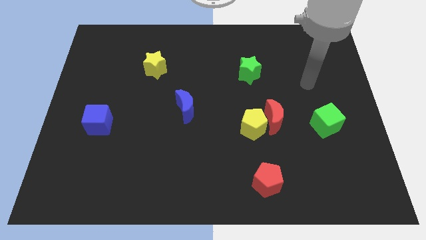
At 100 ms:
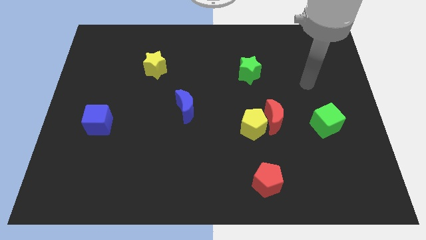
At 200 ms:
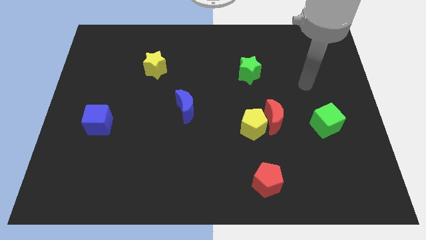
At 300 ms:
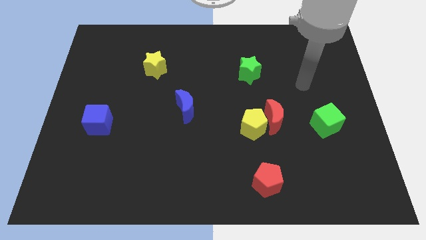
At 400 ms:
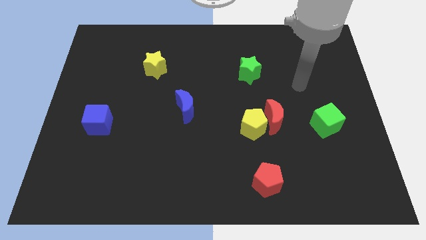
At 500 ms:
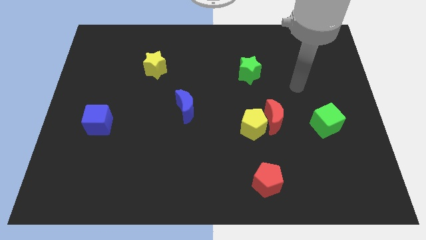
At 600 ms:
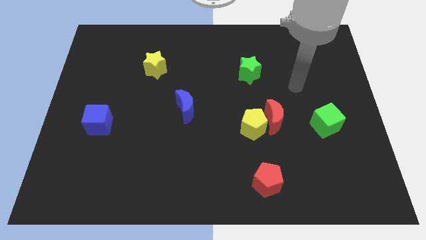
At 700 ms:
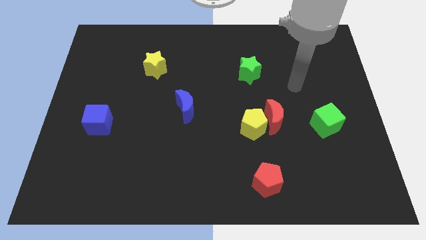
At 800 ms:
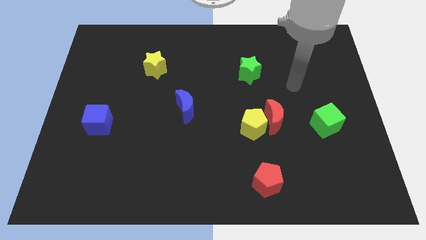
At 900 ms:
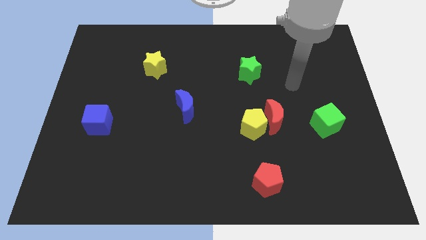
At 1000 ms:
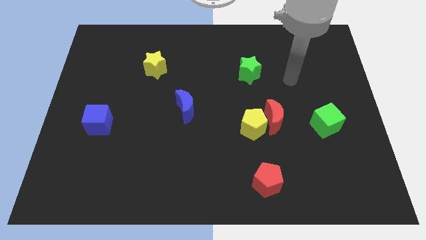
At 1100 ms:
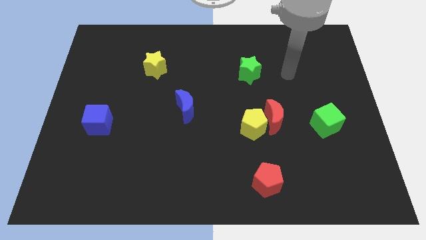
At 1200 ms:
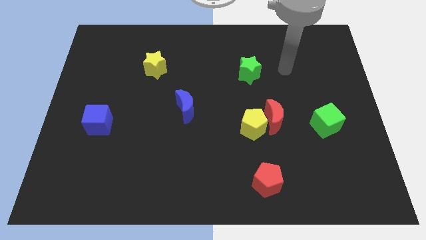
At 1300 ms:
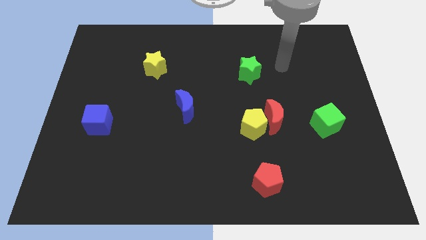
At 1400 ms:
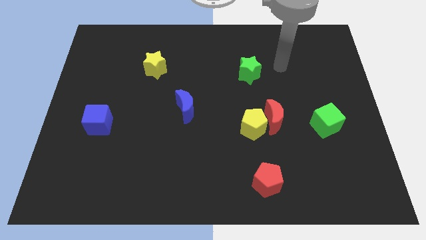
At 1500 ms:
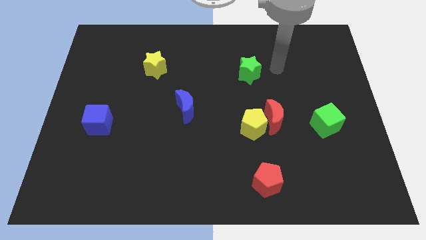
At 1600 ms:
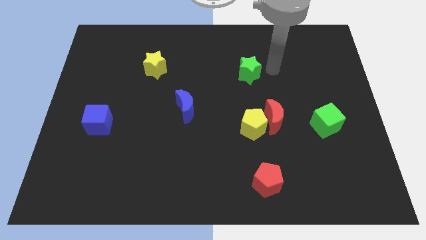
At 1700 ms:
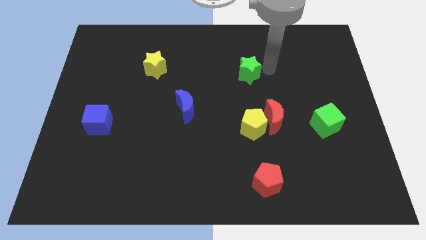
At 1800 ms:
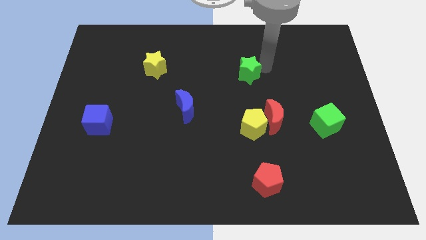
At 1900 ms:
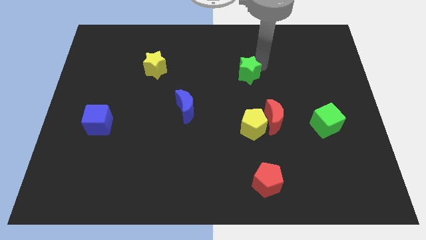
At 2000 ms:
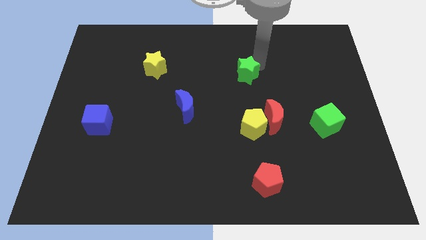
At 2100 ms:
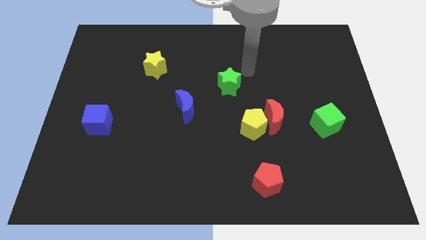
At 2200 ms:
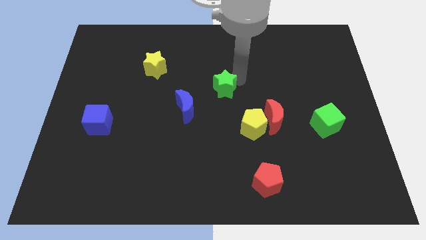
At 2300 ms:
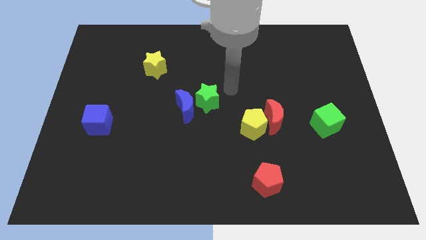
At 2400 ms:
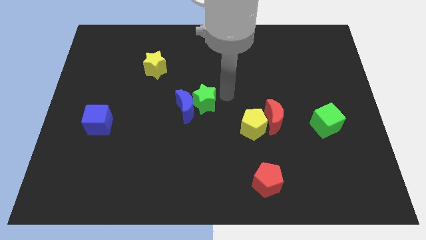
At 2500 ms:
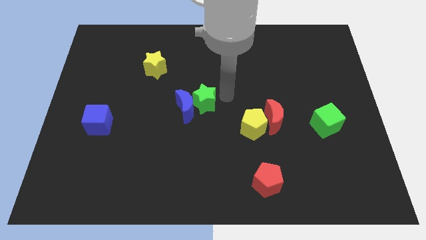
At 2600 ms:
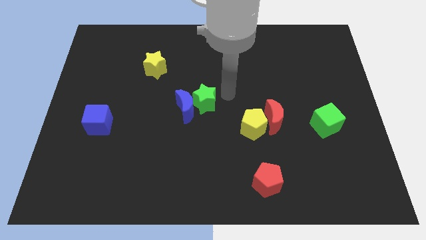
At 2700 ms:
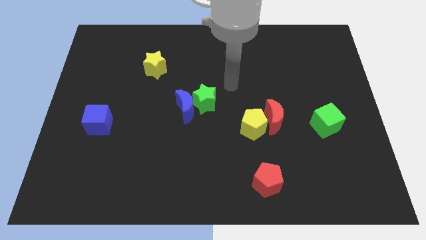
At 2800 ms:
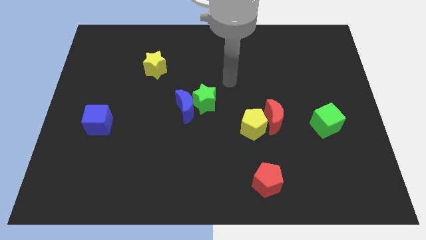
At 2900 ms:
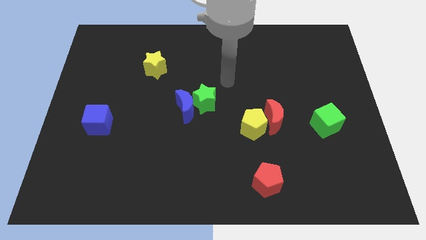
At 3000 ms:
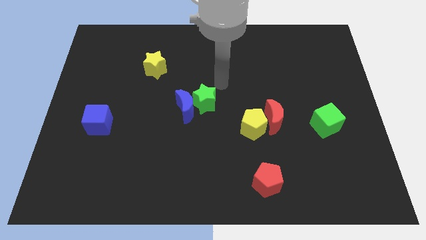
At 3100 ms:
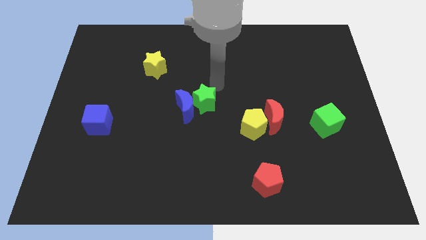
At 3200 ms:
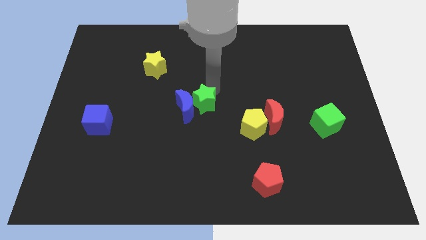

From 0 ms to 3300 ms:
move the green star into the blue crescent

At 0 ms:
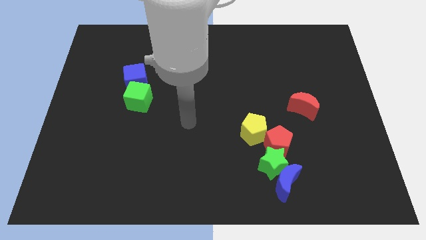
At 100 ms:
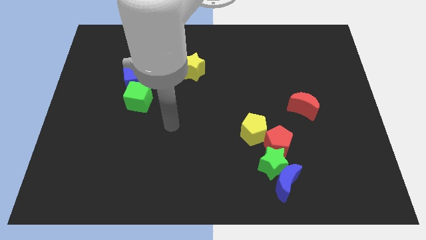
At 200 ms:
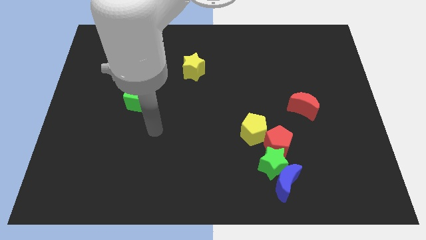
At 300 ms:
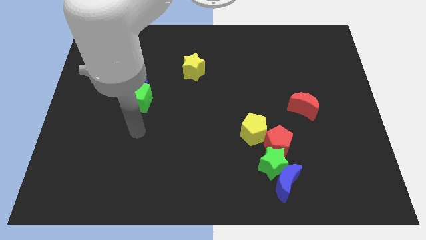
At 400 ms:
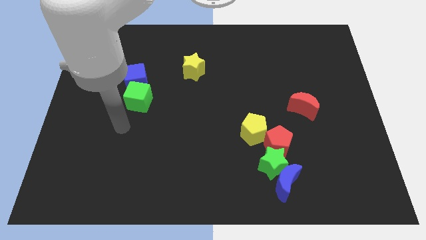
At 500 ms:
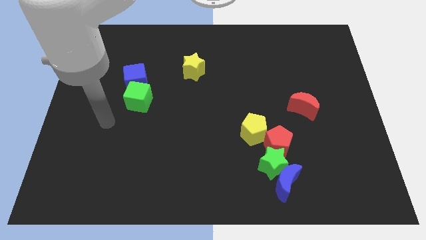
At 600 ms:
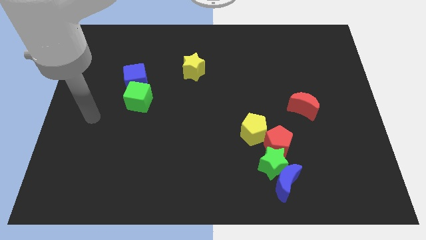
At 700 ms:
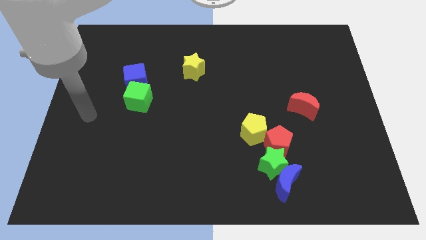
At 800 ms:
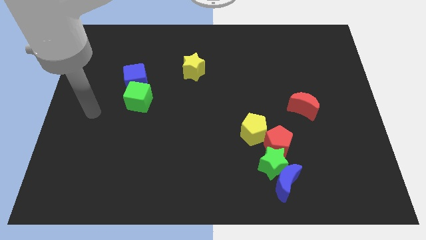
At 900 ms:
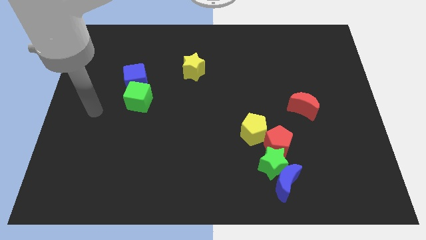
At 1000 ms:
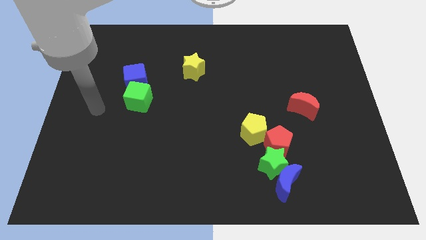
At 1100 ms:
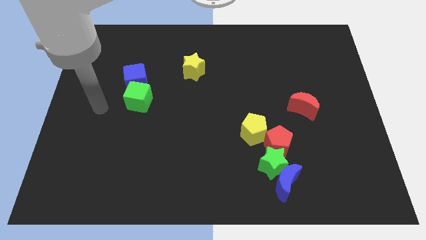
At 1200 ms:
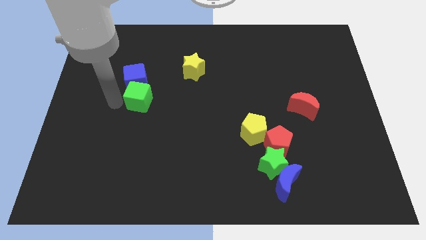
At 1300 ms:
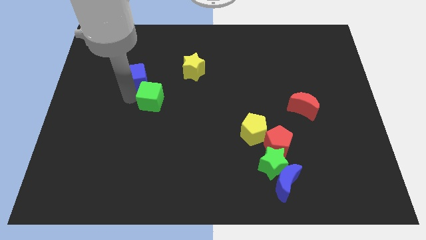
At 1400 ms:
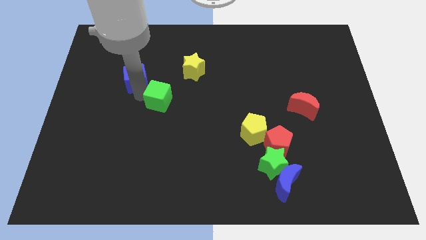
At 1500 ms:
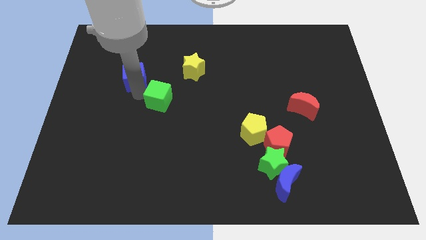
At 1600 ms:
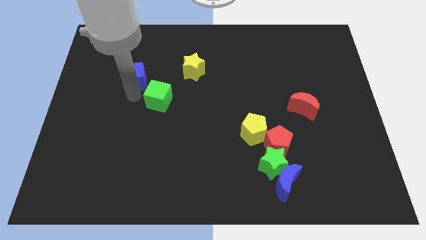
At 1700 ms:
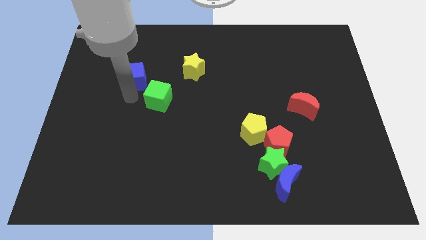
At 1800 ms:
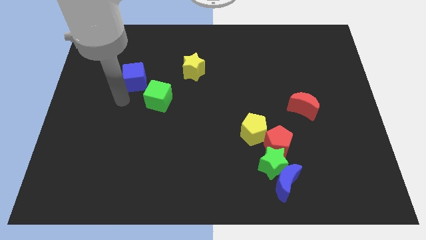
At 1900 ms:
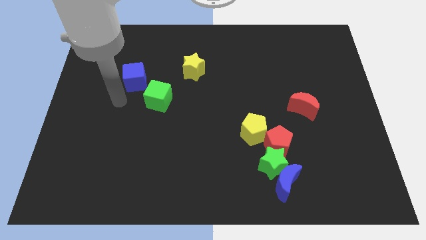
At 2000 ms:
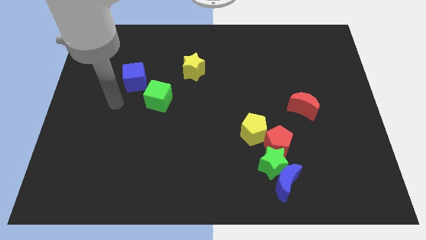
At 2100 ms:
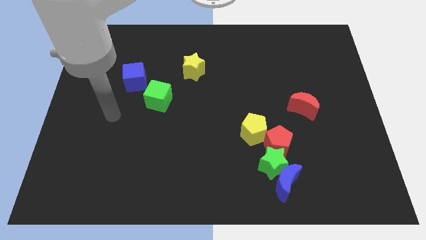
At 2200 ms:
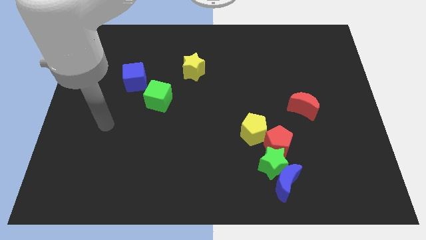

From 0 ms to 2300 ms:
place the green star slightly towards center of the board

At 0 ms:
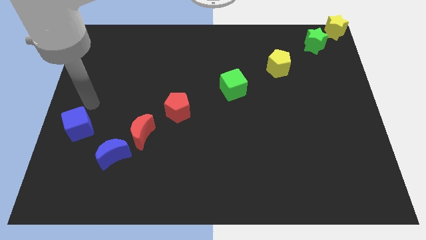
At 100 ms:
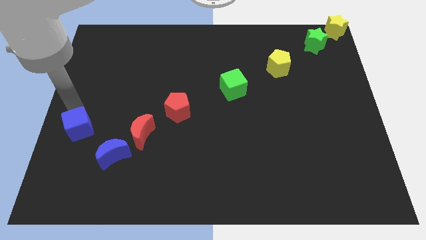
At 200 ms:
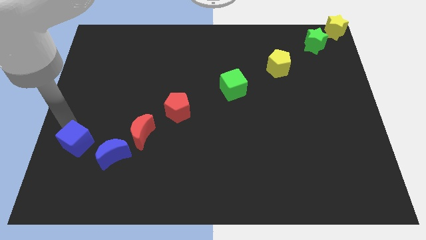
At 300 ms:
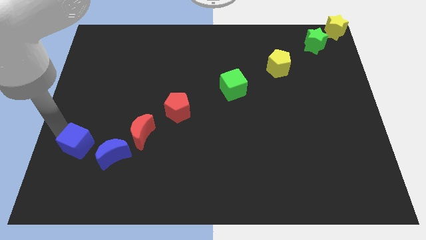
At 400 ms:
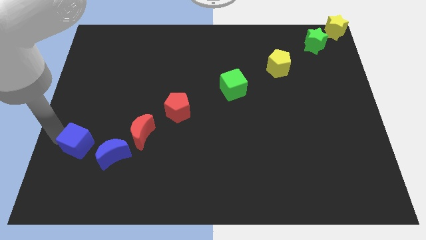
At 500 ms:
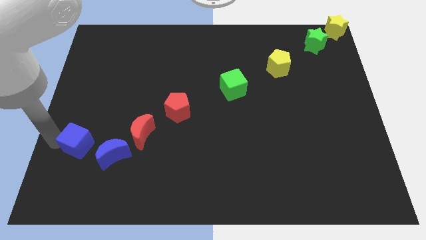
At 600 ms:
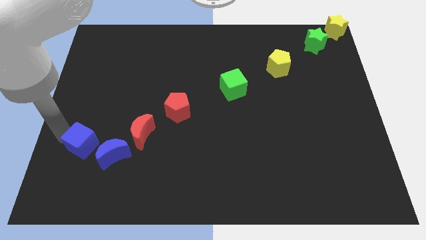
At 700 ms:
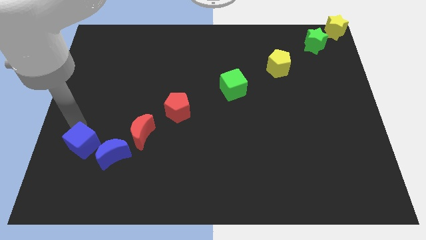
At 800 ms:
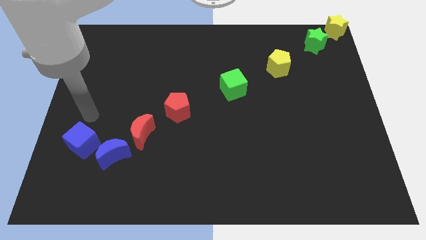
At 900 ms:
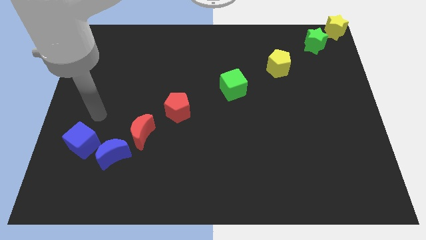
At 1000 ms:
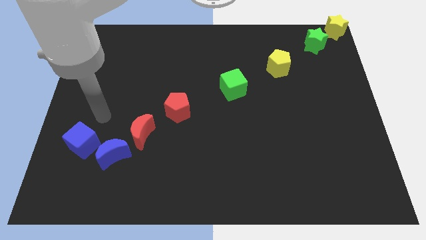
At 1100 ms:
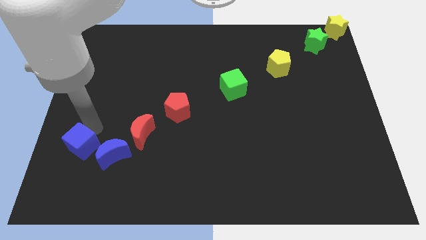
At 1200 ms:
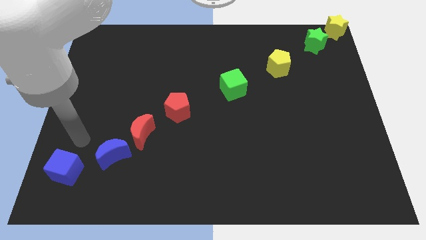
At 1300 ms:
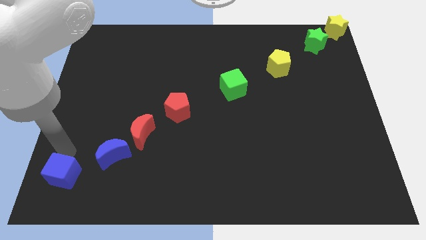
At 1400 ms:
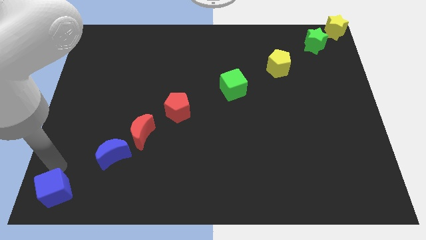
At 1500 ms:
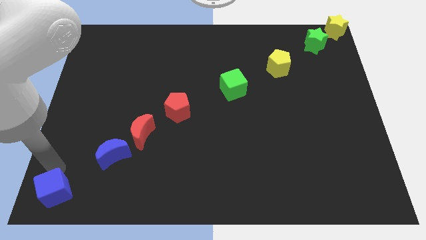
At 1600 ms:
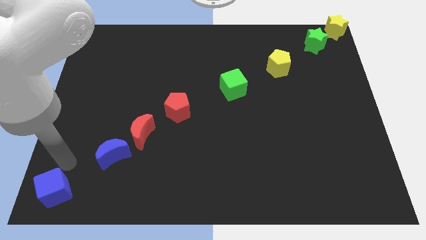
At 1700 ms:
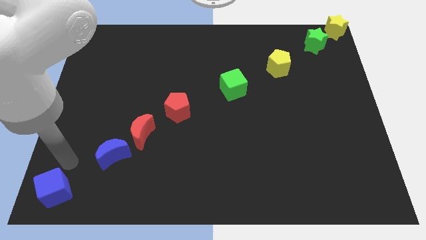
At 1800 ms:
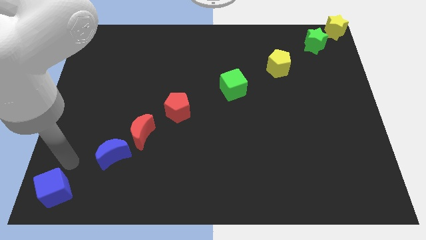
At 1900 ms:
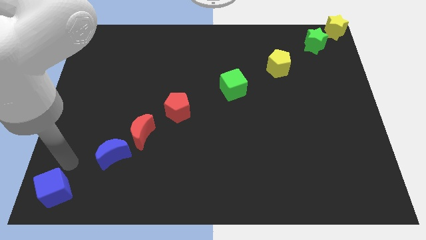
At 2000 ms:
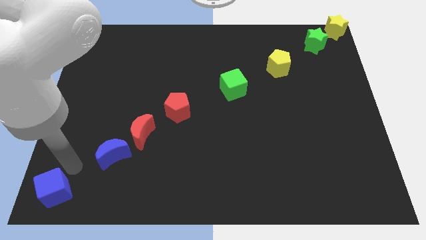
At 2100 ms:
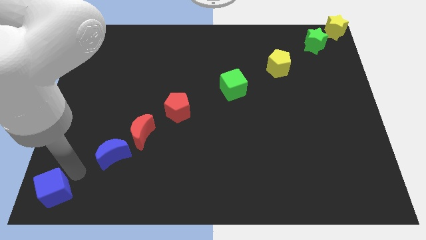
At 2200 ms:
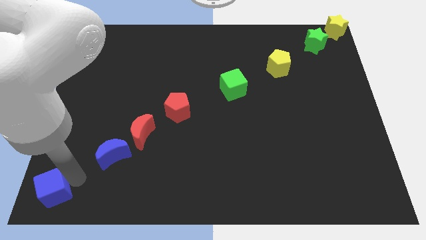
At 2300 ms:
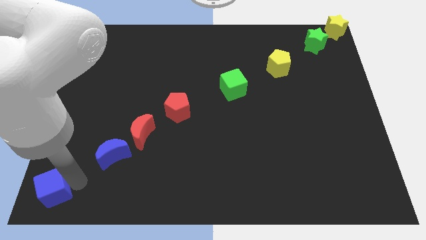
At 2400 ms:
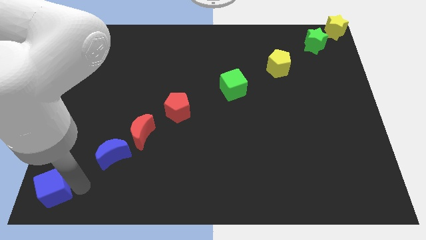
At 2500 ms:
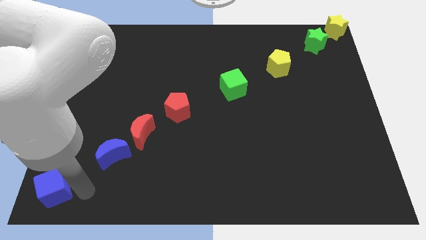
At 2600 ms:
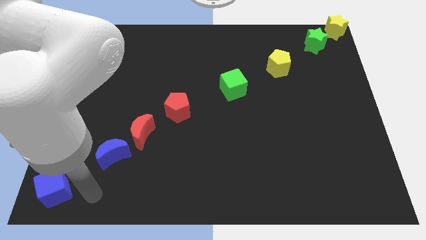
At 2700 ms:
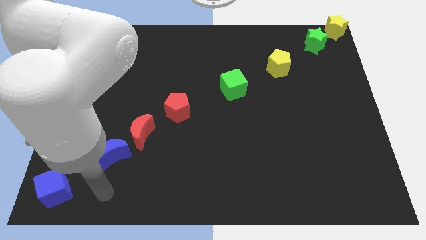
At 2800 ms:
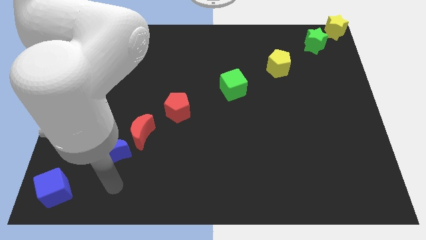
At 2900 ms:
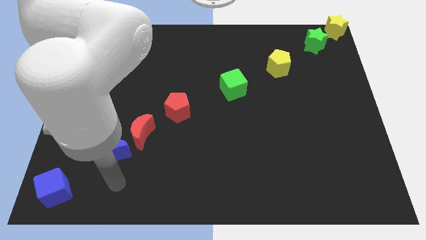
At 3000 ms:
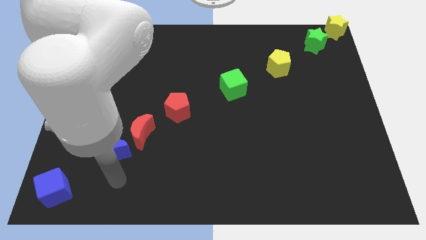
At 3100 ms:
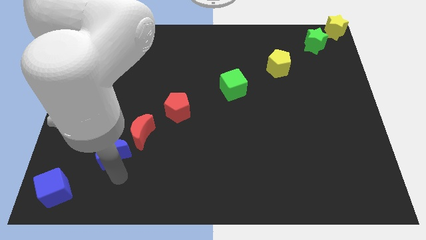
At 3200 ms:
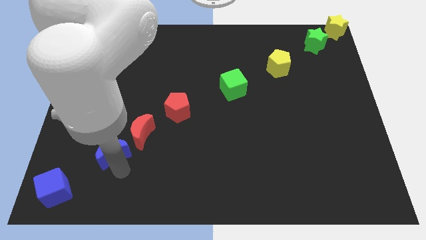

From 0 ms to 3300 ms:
move the blue cube to the left side of the blue moon
